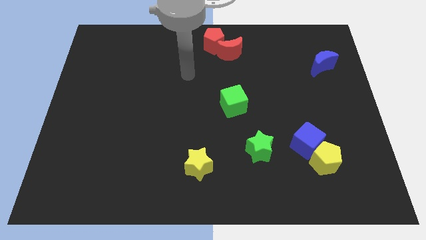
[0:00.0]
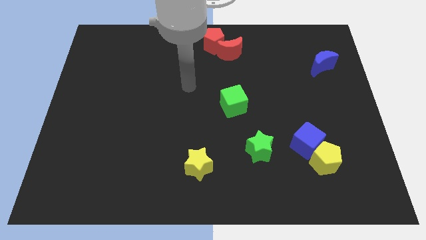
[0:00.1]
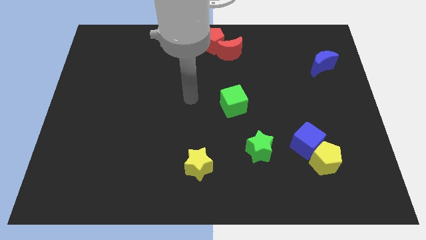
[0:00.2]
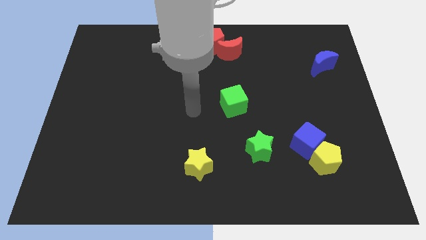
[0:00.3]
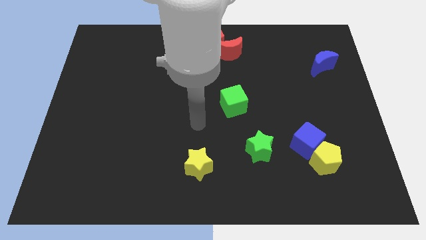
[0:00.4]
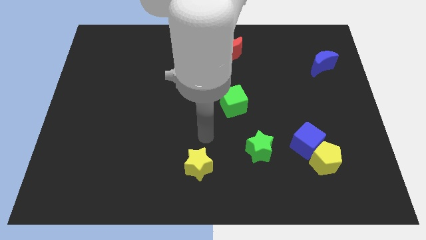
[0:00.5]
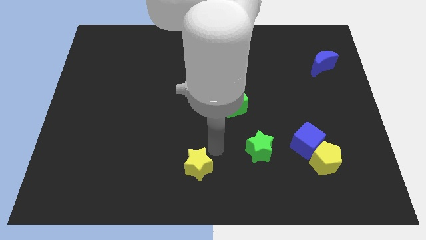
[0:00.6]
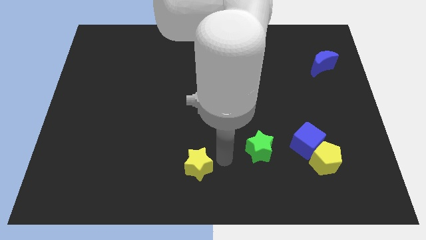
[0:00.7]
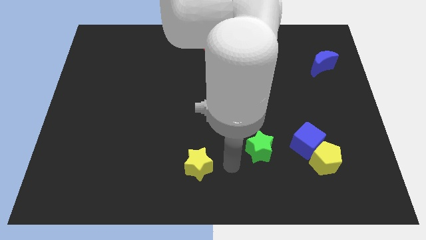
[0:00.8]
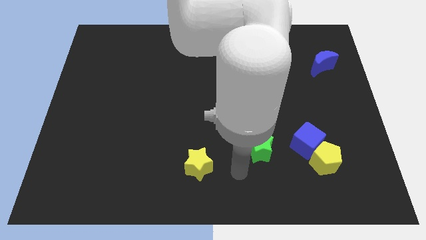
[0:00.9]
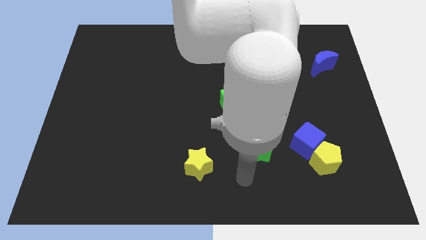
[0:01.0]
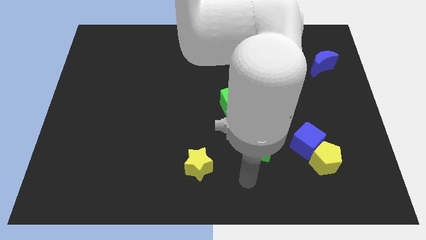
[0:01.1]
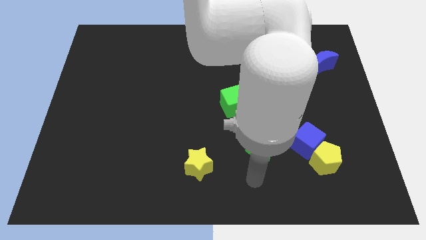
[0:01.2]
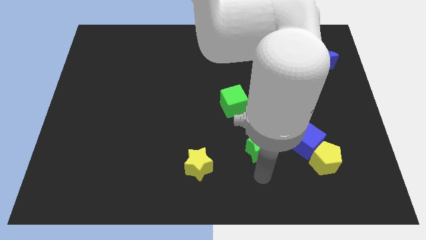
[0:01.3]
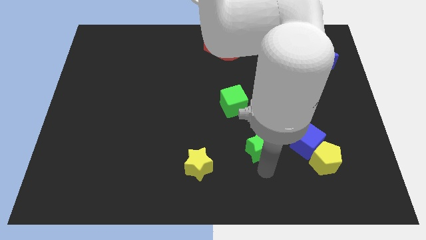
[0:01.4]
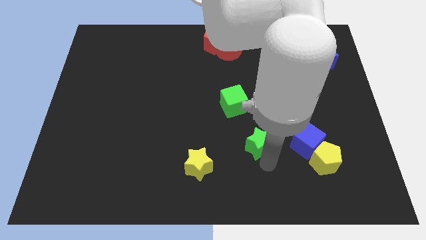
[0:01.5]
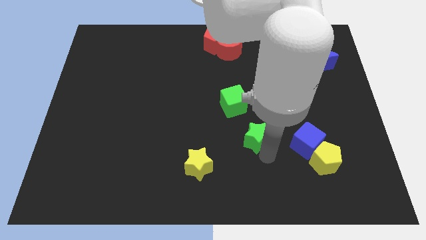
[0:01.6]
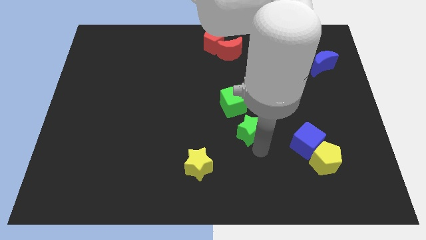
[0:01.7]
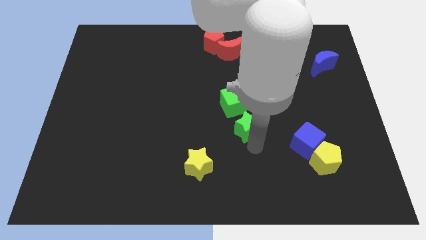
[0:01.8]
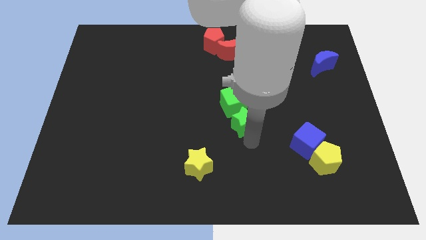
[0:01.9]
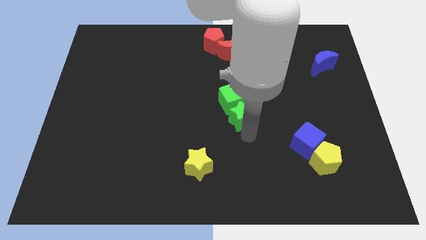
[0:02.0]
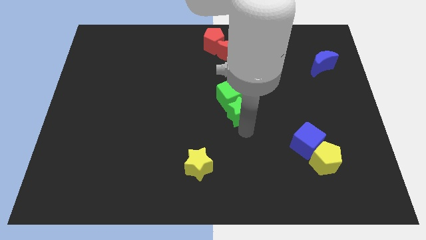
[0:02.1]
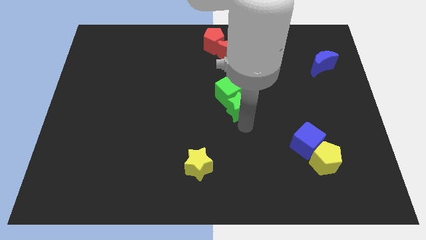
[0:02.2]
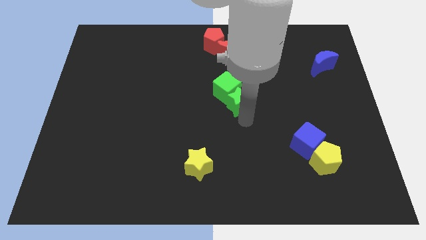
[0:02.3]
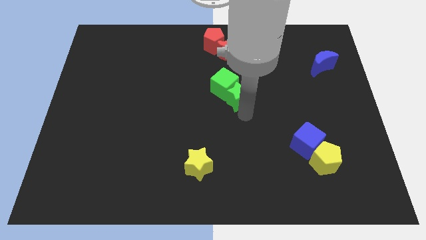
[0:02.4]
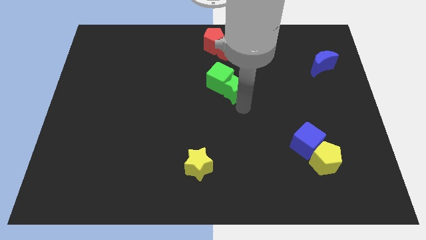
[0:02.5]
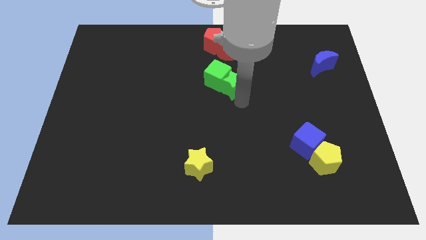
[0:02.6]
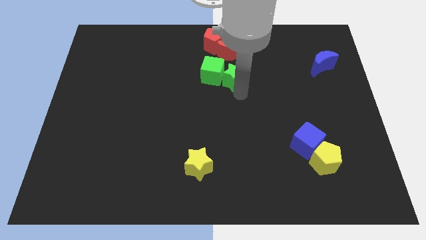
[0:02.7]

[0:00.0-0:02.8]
move green blocks to the bottom of red blocks

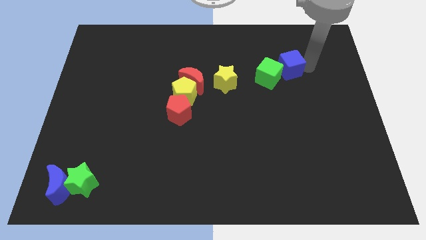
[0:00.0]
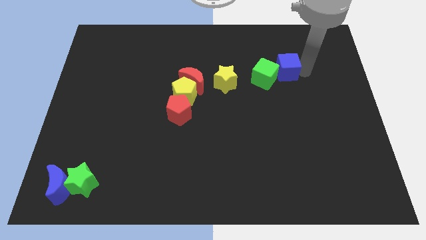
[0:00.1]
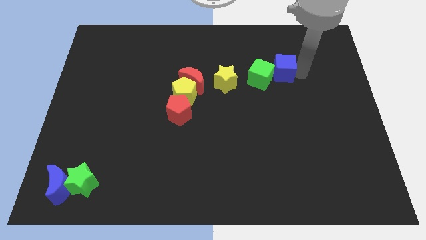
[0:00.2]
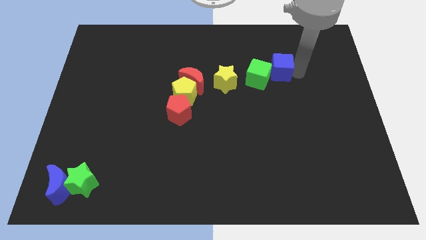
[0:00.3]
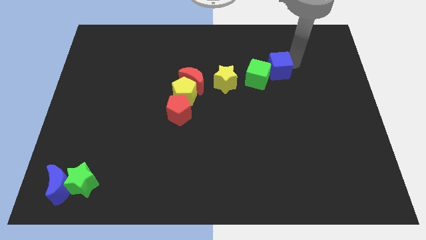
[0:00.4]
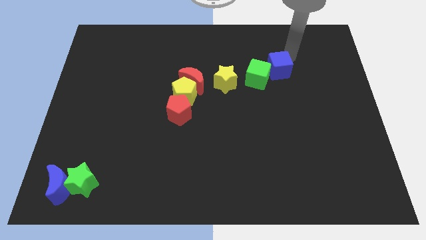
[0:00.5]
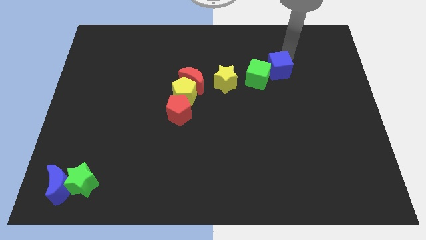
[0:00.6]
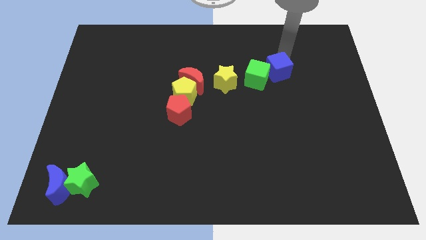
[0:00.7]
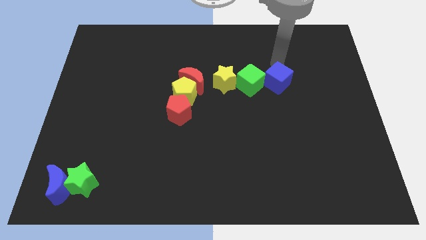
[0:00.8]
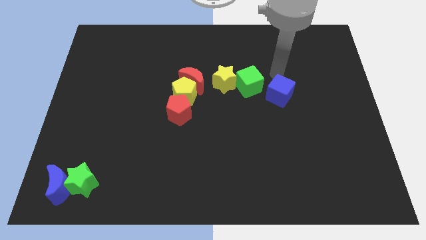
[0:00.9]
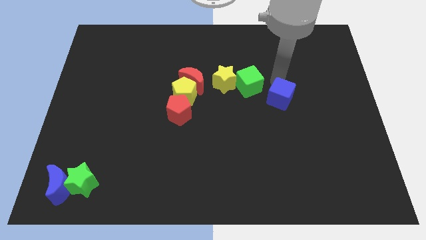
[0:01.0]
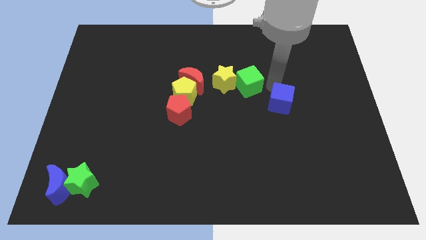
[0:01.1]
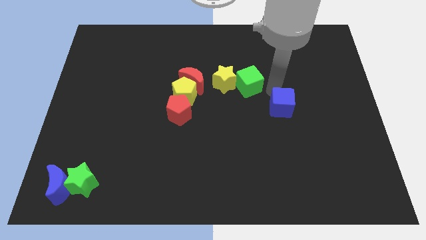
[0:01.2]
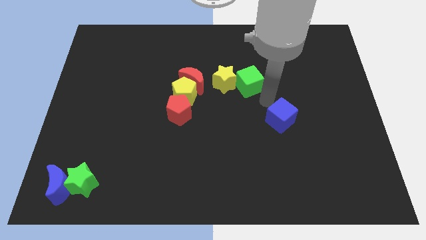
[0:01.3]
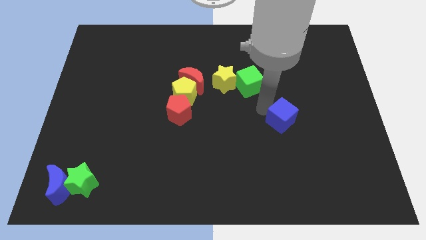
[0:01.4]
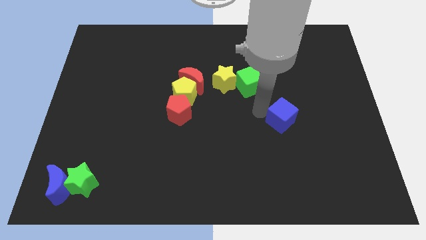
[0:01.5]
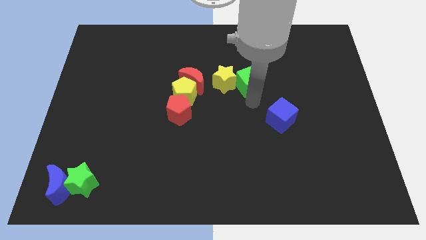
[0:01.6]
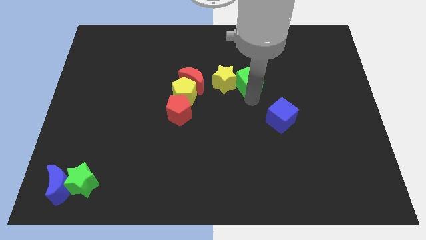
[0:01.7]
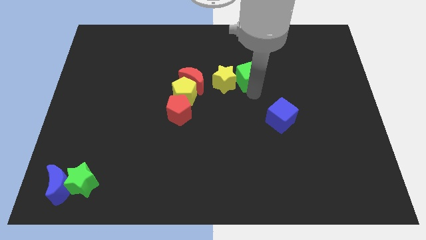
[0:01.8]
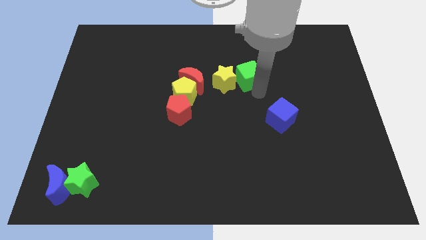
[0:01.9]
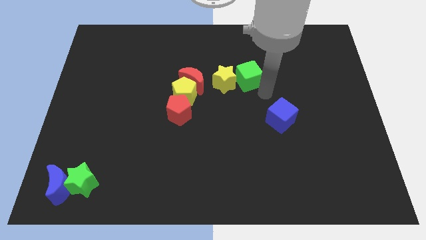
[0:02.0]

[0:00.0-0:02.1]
push the green cube towards the right side of the yellow star with the help of the blue cube

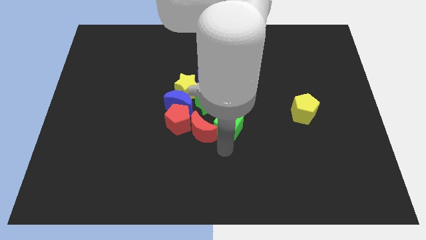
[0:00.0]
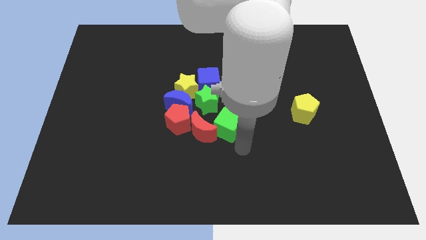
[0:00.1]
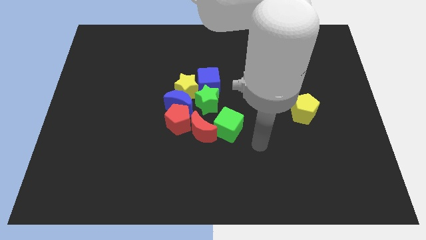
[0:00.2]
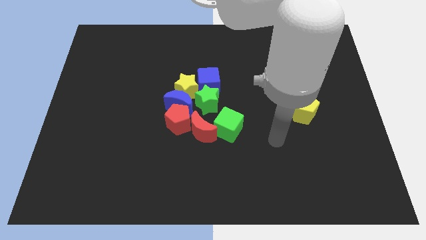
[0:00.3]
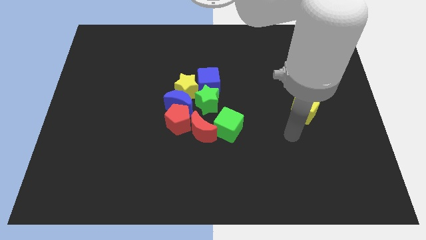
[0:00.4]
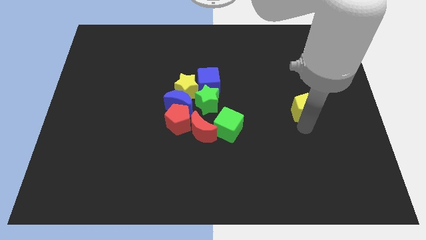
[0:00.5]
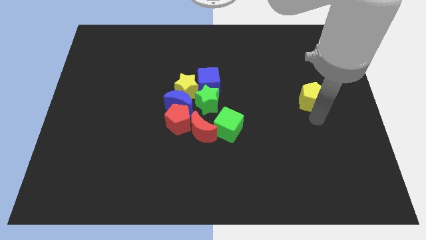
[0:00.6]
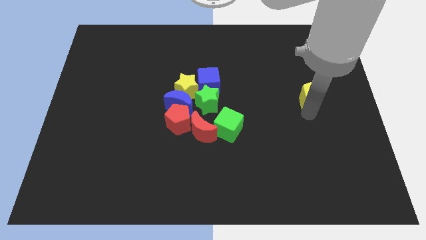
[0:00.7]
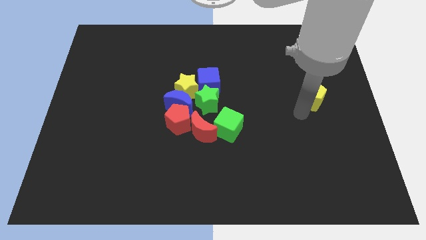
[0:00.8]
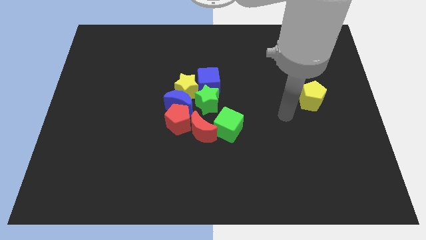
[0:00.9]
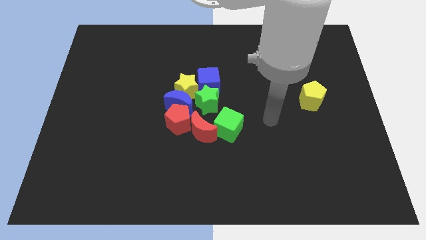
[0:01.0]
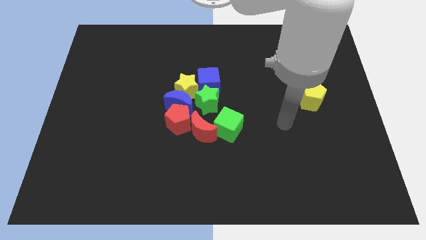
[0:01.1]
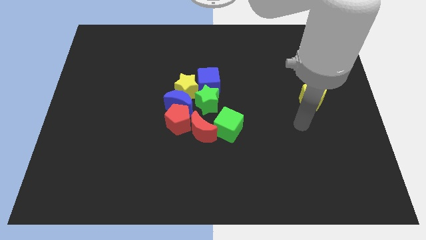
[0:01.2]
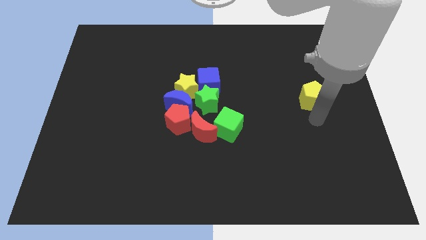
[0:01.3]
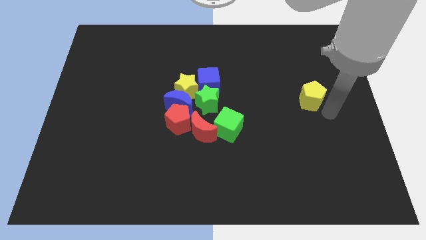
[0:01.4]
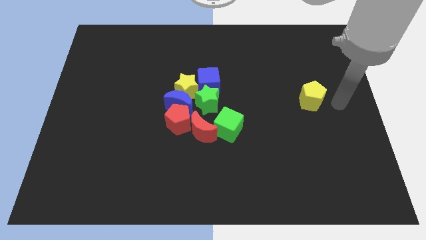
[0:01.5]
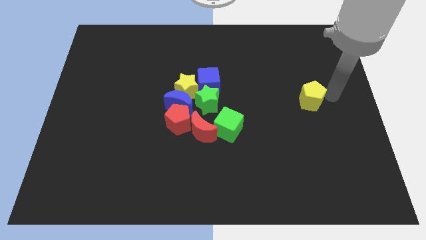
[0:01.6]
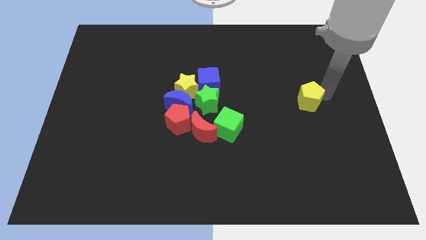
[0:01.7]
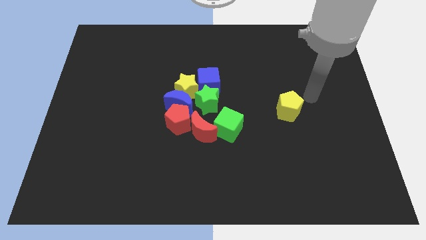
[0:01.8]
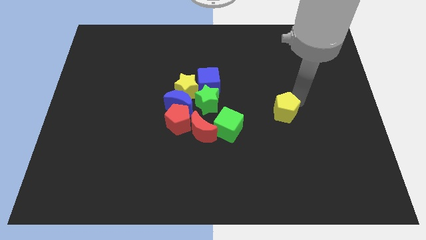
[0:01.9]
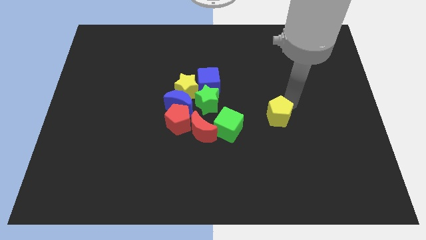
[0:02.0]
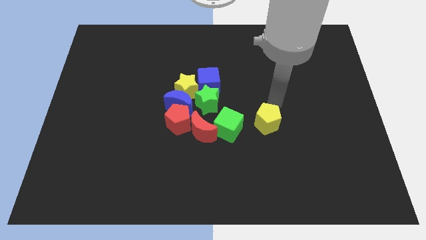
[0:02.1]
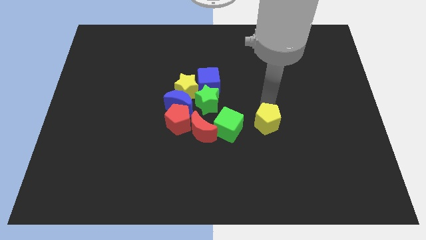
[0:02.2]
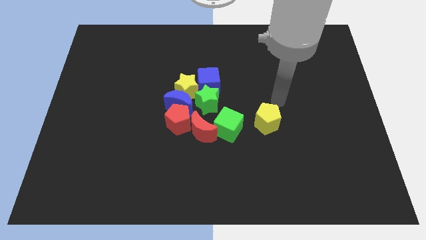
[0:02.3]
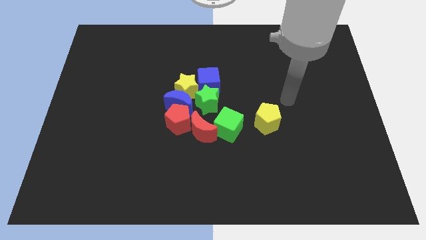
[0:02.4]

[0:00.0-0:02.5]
move the yellow pentagon slightly to the left

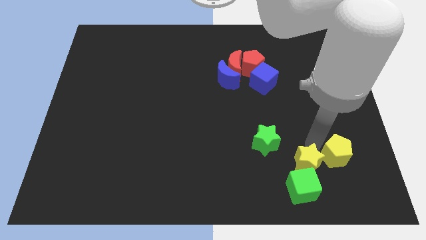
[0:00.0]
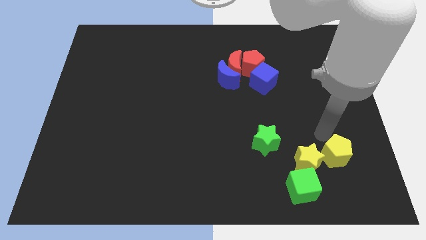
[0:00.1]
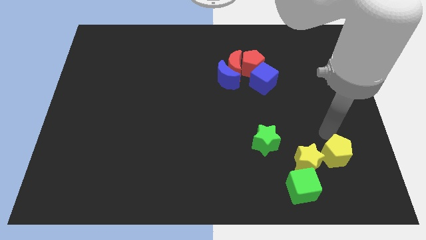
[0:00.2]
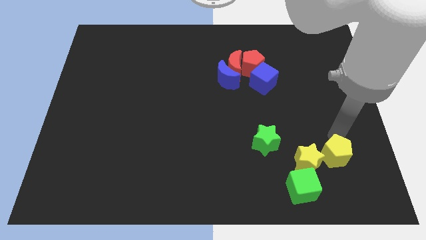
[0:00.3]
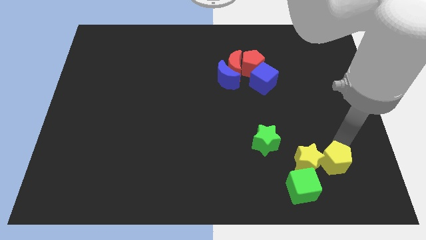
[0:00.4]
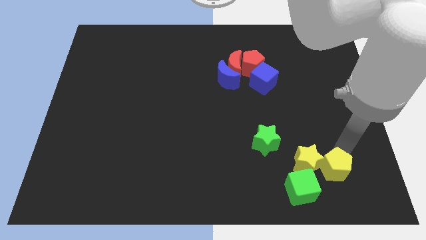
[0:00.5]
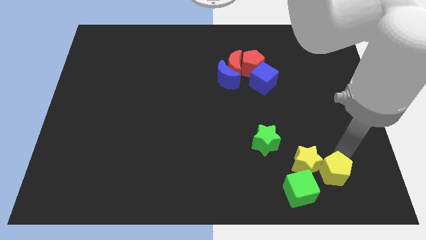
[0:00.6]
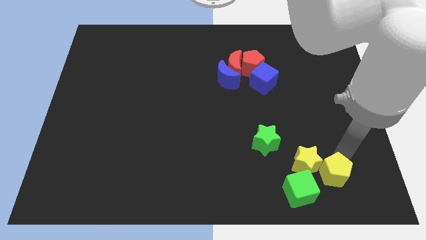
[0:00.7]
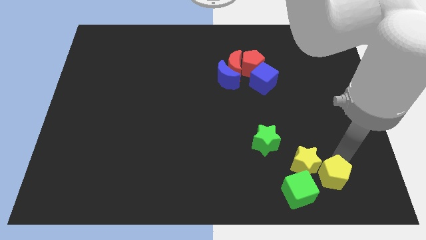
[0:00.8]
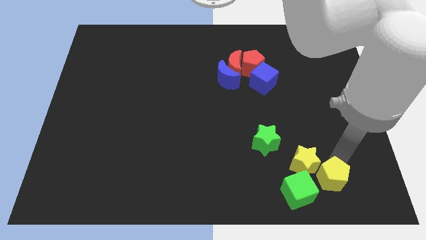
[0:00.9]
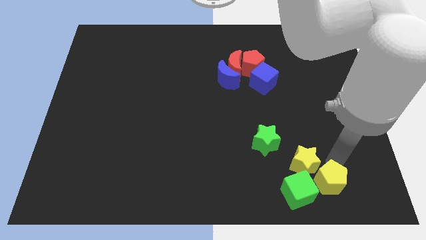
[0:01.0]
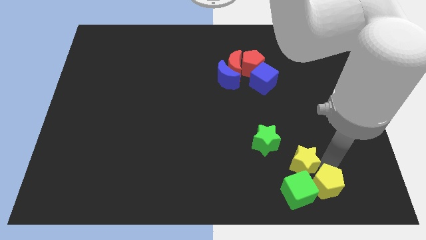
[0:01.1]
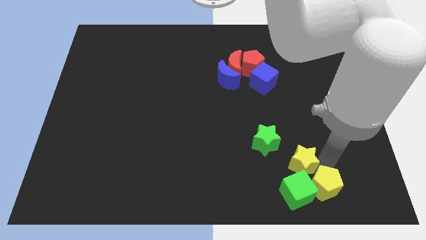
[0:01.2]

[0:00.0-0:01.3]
form a triangle using yellow staryellow pentagon and green cube

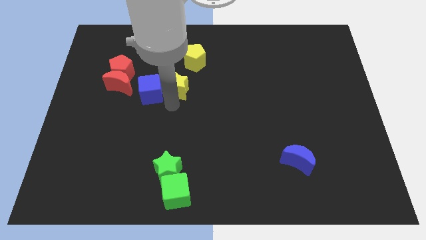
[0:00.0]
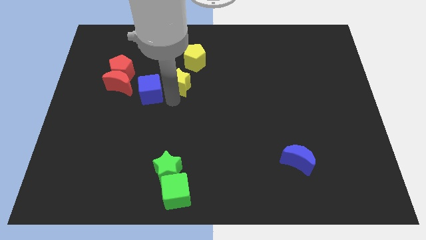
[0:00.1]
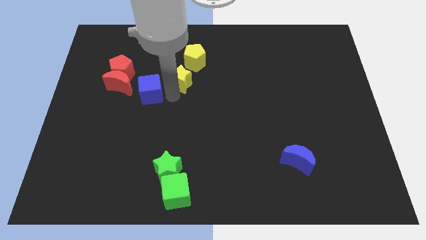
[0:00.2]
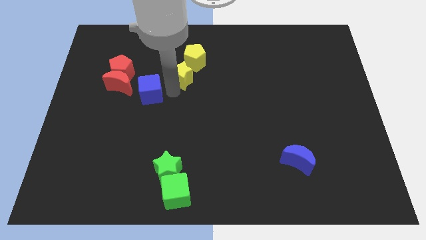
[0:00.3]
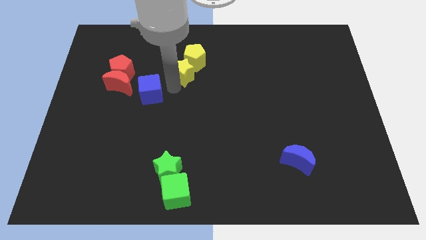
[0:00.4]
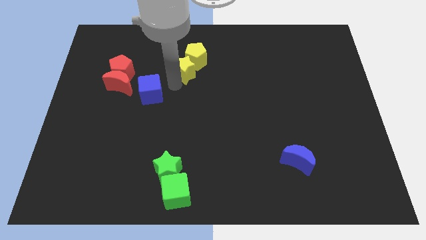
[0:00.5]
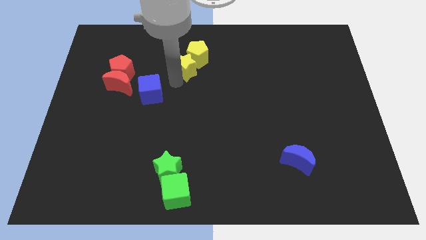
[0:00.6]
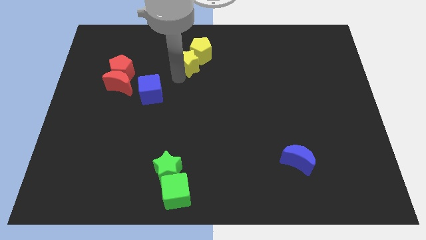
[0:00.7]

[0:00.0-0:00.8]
push yellow star into yellow pentagon
